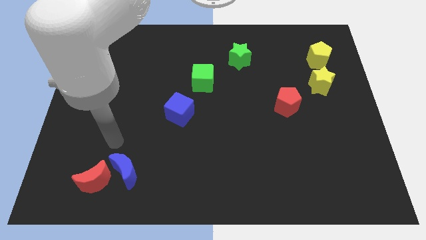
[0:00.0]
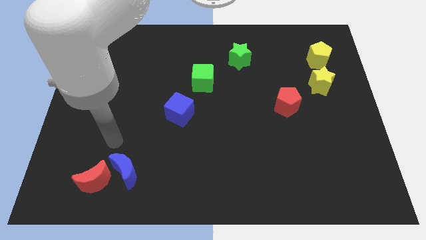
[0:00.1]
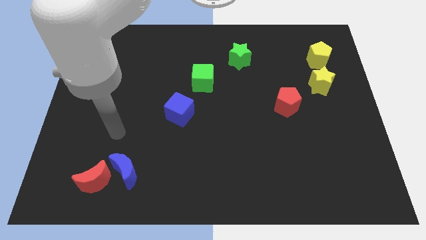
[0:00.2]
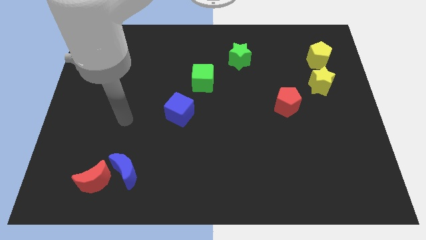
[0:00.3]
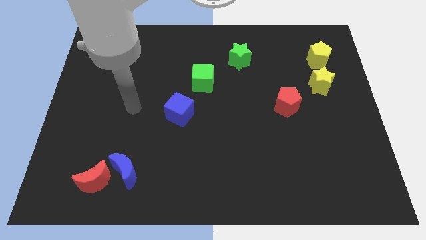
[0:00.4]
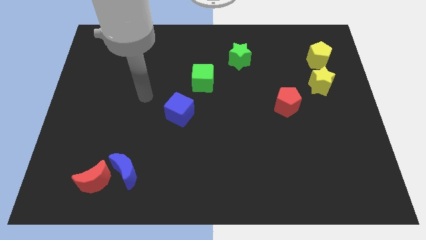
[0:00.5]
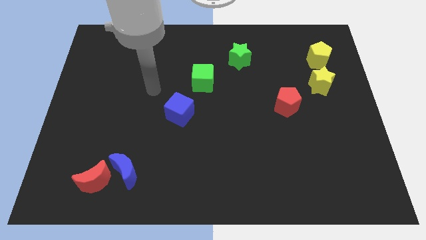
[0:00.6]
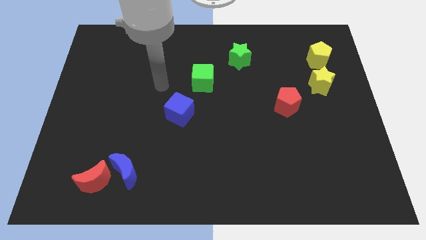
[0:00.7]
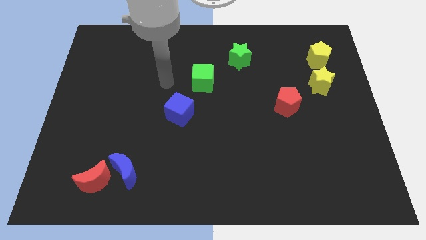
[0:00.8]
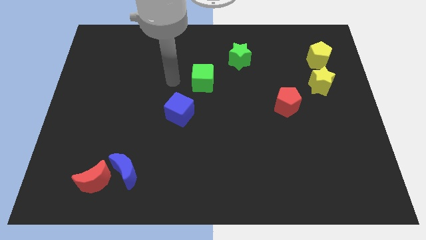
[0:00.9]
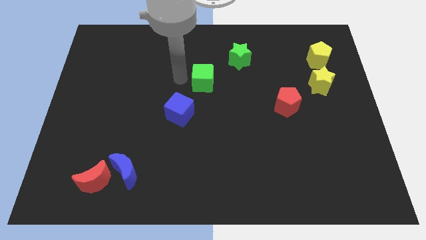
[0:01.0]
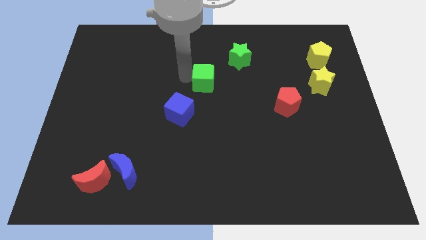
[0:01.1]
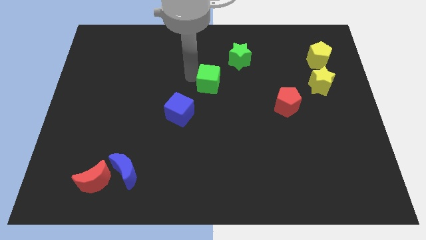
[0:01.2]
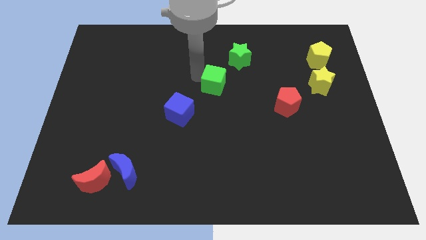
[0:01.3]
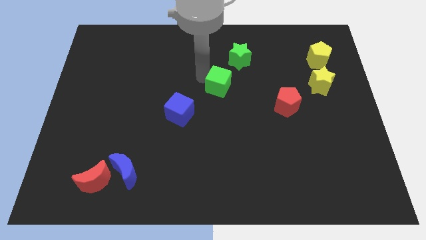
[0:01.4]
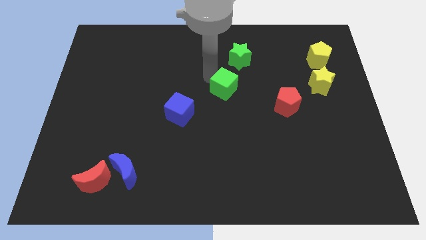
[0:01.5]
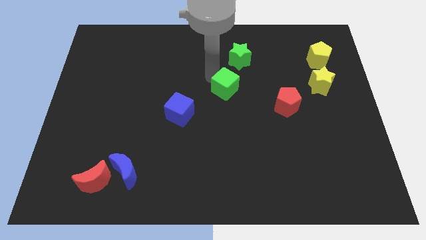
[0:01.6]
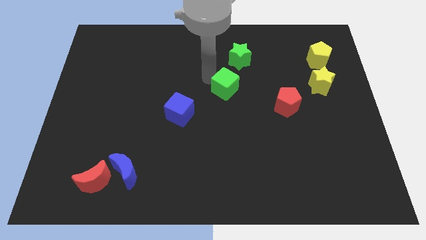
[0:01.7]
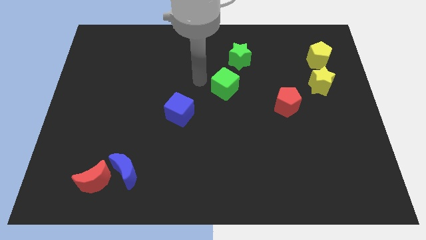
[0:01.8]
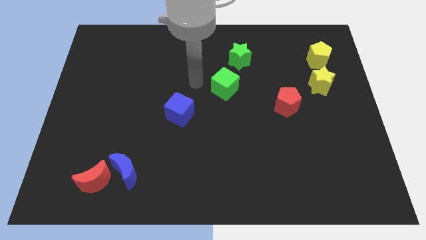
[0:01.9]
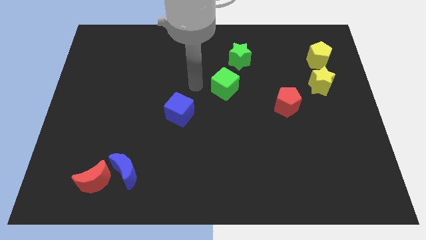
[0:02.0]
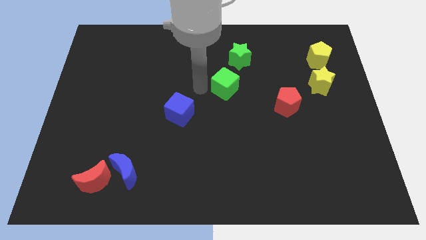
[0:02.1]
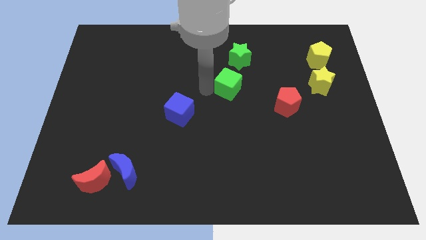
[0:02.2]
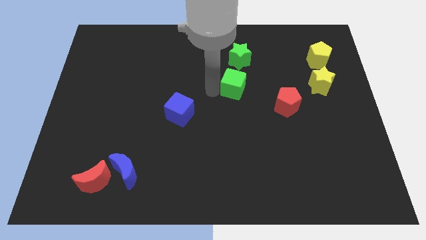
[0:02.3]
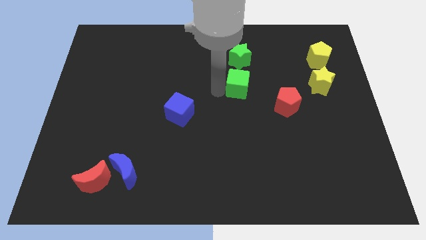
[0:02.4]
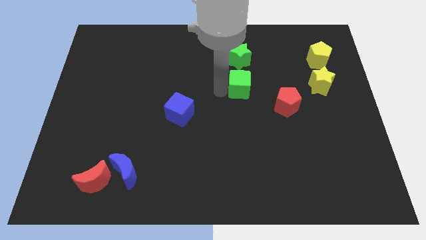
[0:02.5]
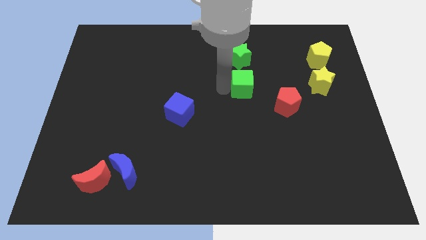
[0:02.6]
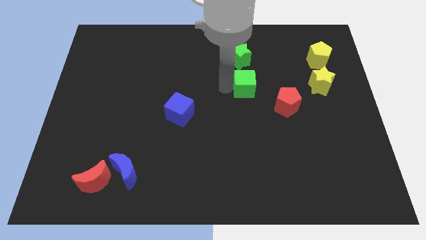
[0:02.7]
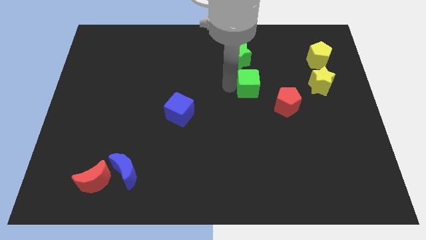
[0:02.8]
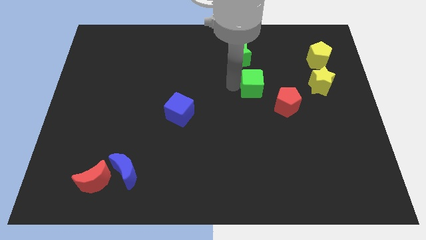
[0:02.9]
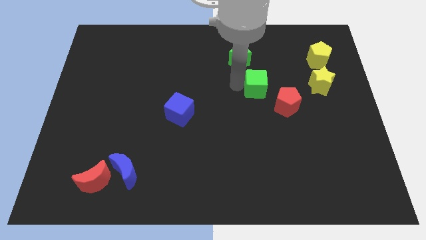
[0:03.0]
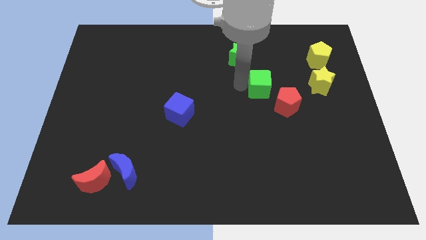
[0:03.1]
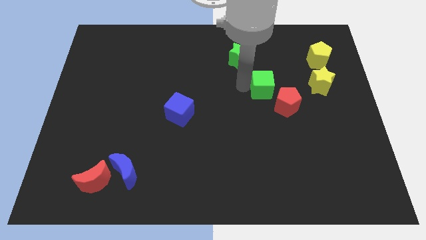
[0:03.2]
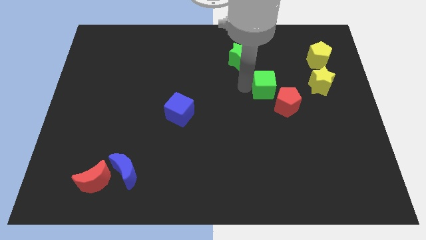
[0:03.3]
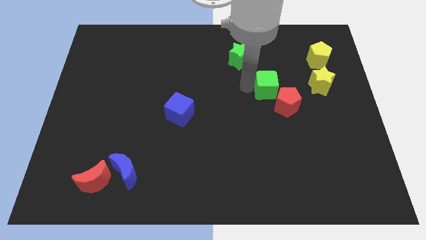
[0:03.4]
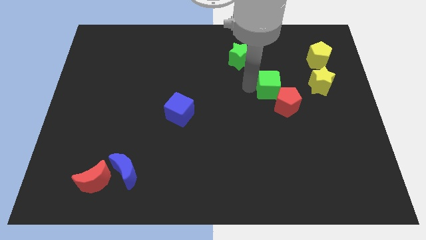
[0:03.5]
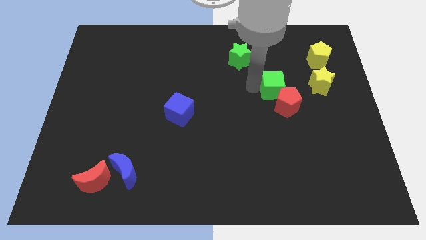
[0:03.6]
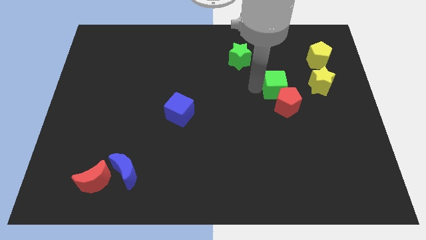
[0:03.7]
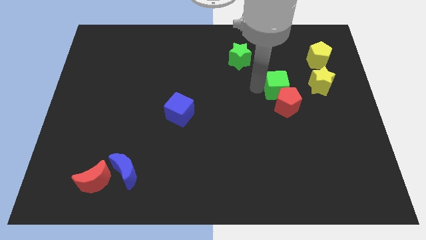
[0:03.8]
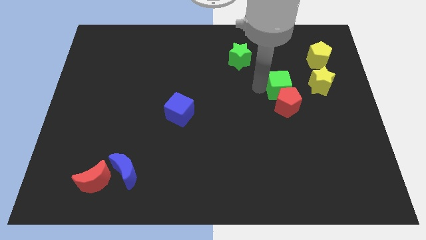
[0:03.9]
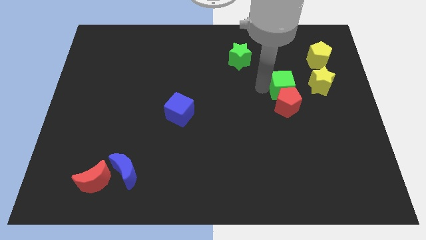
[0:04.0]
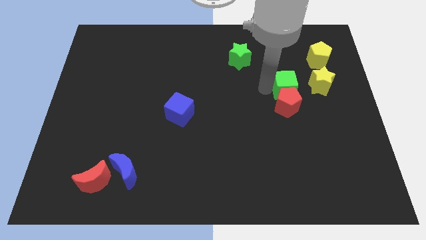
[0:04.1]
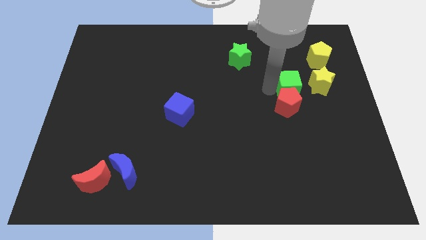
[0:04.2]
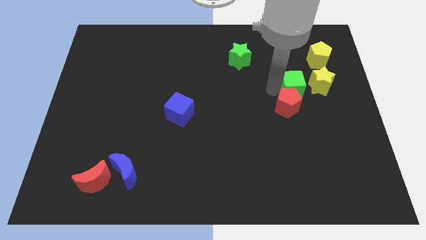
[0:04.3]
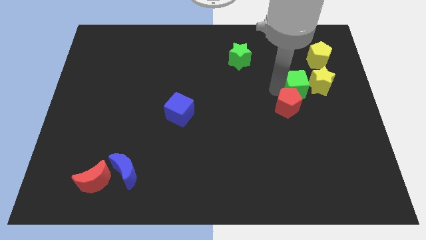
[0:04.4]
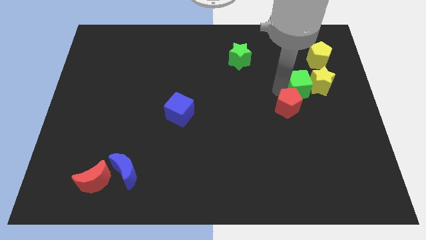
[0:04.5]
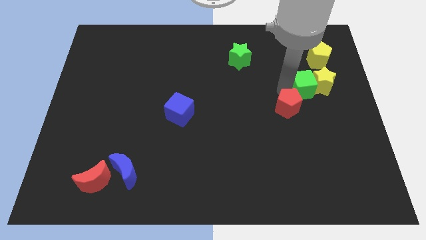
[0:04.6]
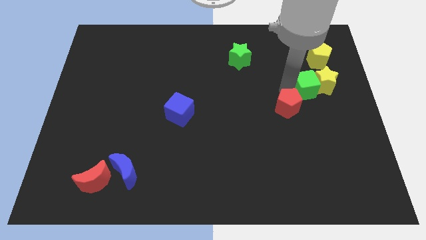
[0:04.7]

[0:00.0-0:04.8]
move the green cube to the yellow star

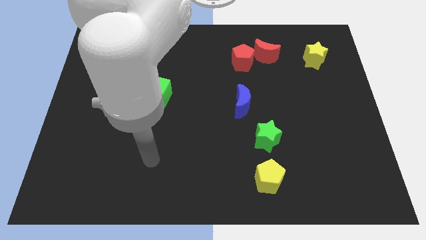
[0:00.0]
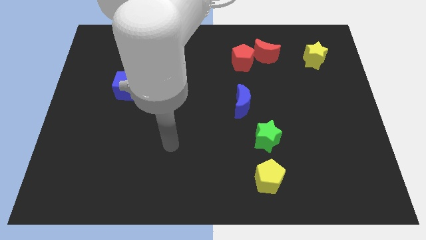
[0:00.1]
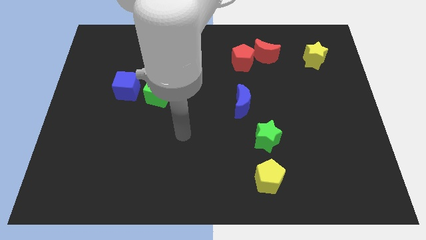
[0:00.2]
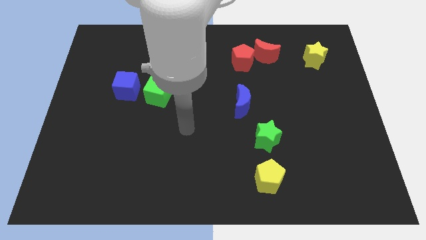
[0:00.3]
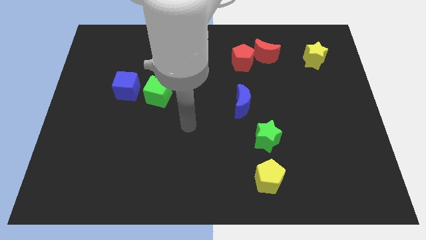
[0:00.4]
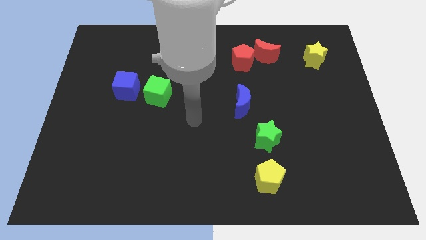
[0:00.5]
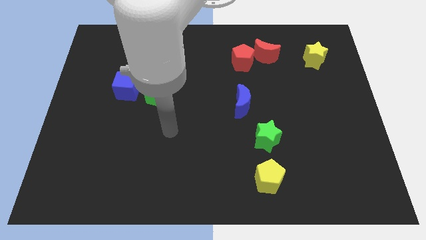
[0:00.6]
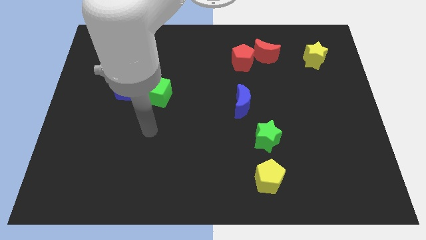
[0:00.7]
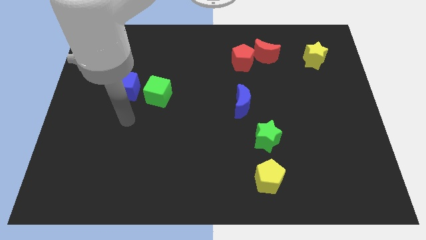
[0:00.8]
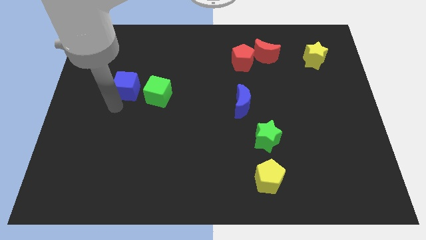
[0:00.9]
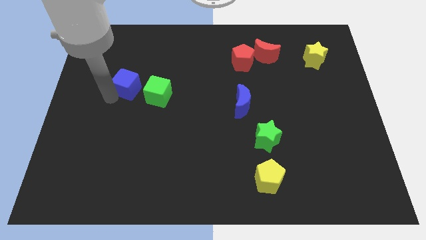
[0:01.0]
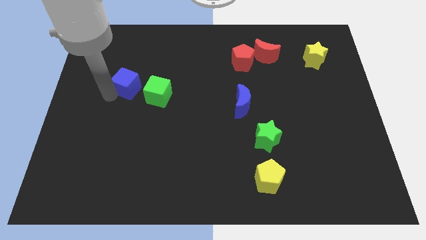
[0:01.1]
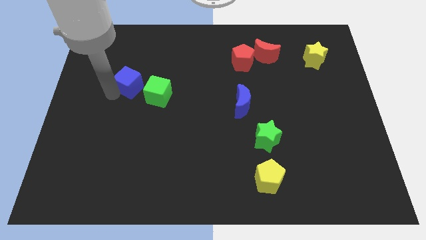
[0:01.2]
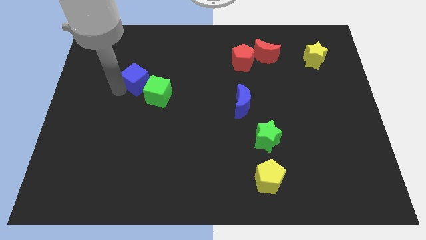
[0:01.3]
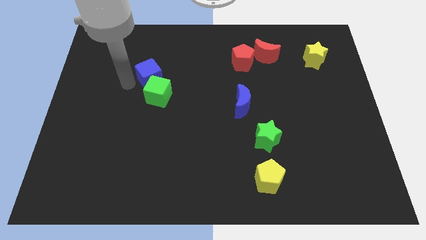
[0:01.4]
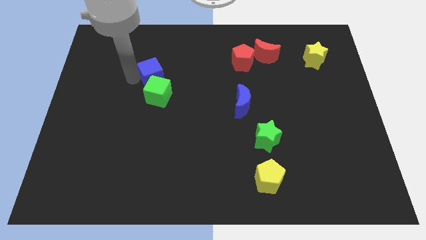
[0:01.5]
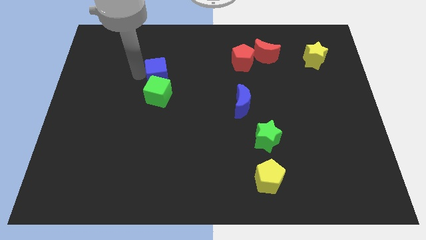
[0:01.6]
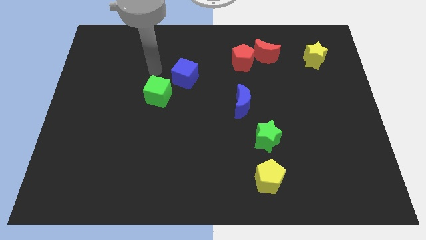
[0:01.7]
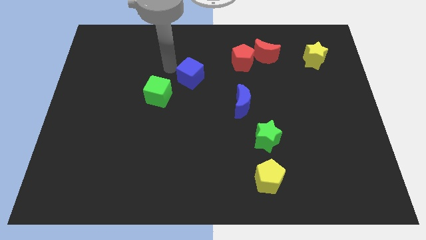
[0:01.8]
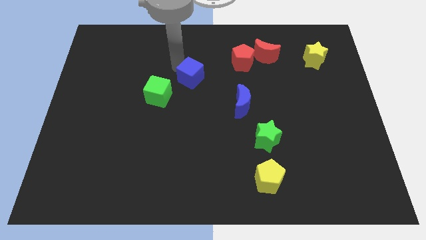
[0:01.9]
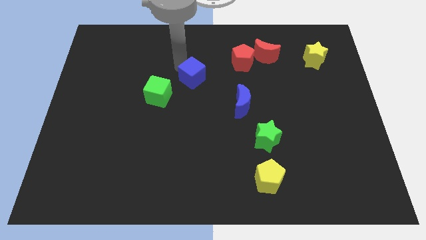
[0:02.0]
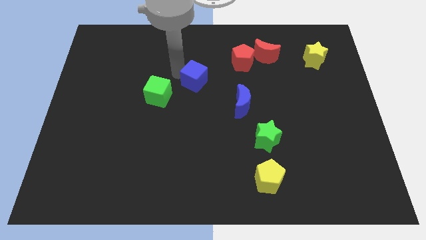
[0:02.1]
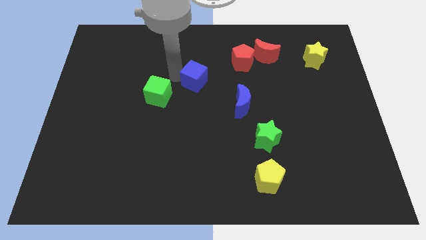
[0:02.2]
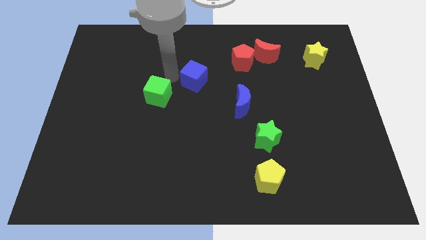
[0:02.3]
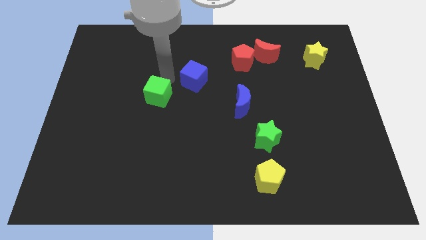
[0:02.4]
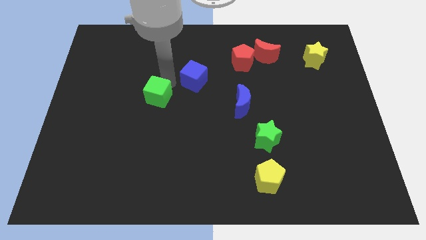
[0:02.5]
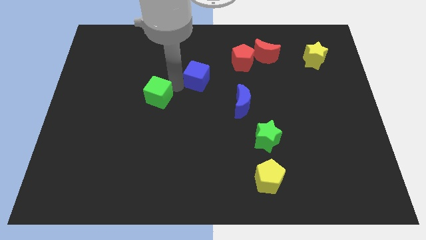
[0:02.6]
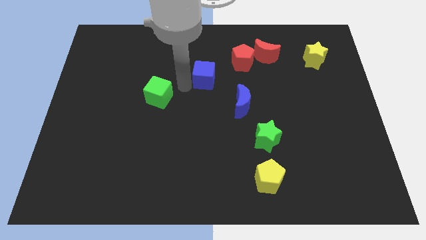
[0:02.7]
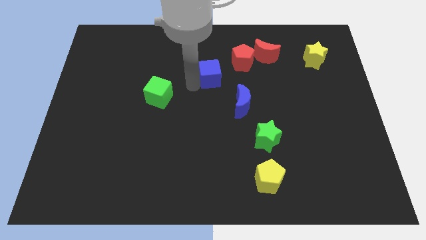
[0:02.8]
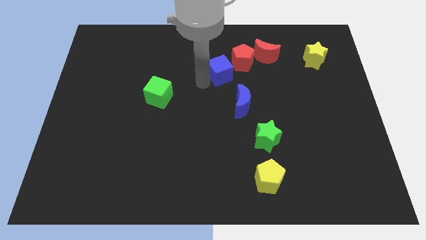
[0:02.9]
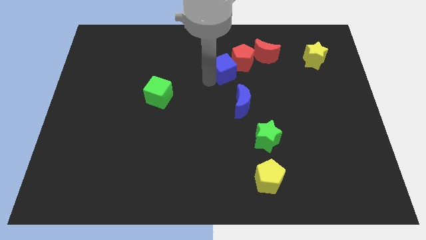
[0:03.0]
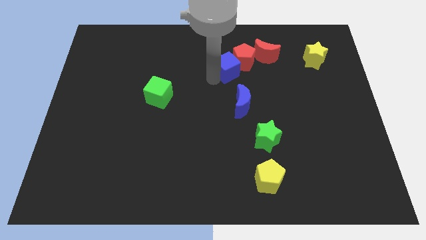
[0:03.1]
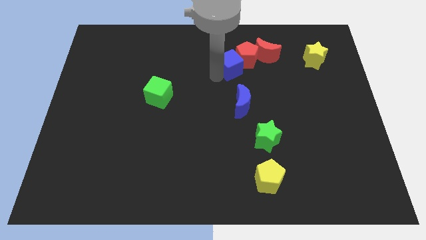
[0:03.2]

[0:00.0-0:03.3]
push the blue cube next to the red pentagon

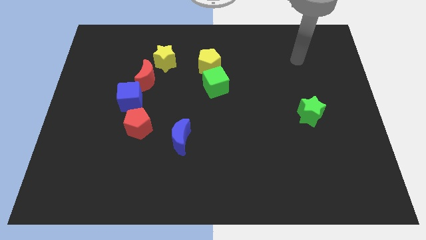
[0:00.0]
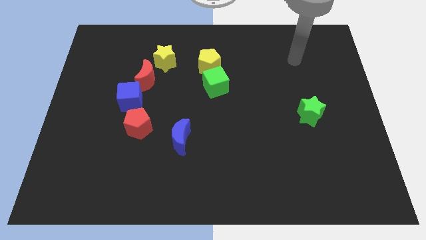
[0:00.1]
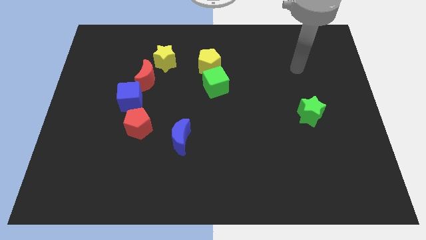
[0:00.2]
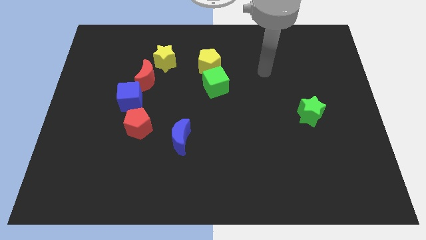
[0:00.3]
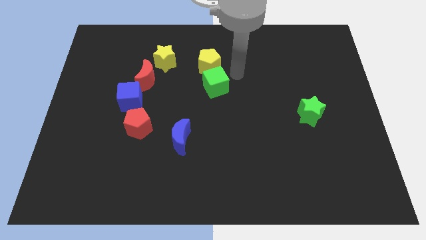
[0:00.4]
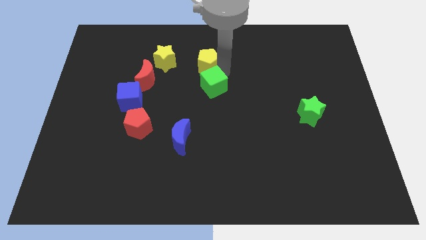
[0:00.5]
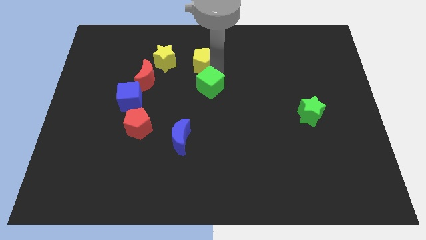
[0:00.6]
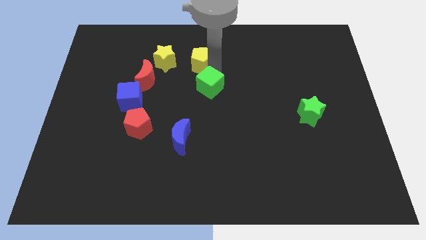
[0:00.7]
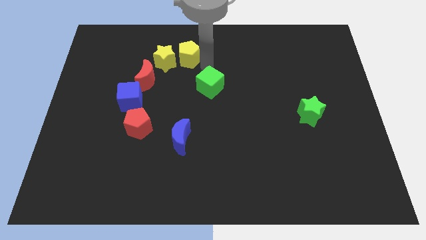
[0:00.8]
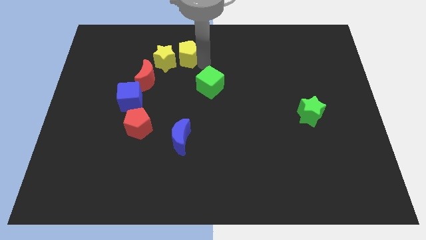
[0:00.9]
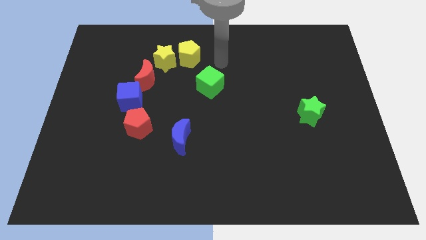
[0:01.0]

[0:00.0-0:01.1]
put the yellow pentagon next to the yellow star
